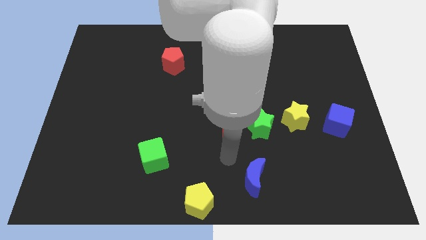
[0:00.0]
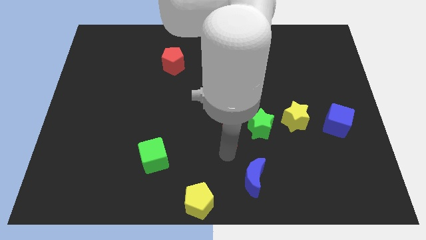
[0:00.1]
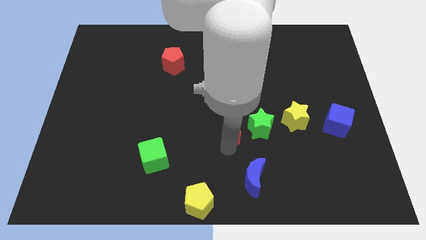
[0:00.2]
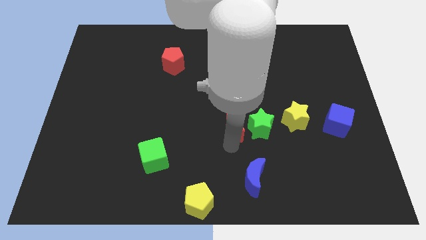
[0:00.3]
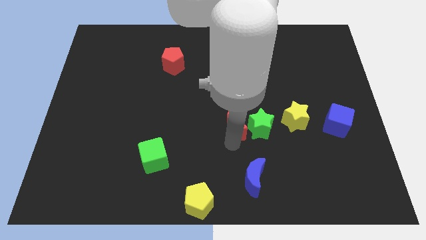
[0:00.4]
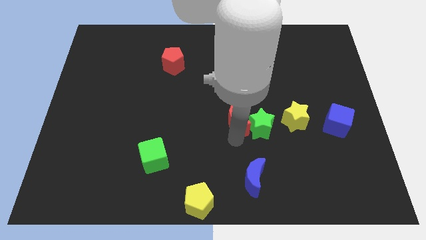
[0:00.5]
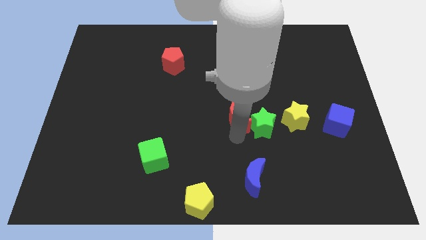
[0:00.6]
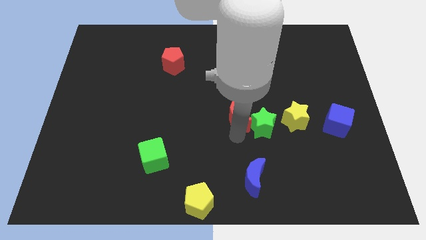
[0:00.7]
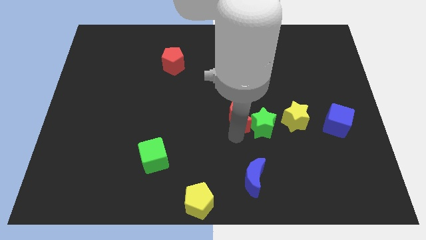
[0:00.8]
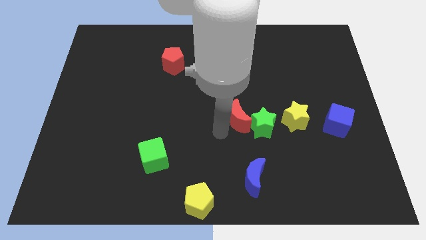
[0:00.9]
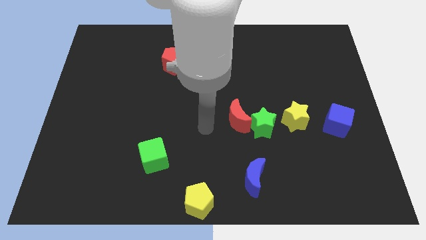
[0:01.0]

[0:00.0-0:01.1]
push the red crescent into the green star

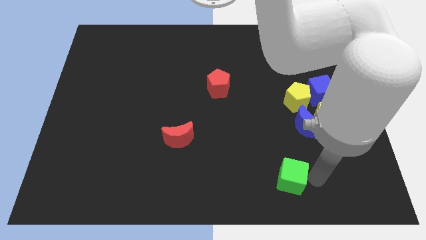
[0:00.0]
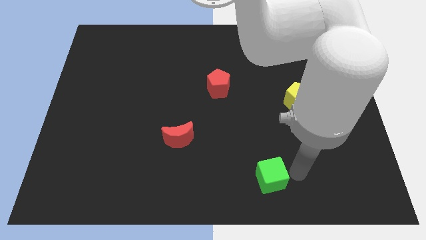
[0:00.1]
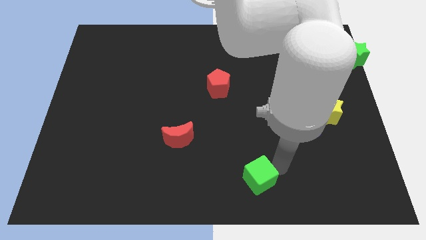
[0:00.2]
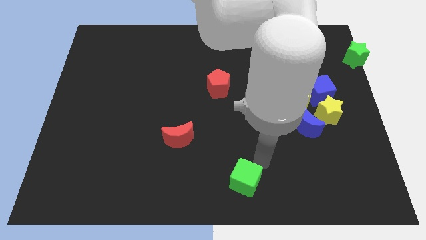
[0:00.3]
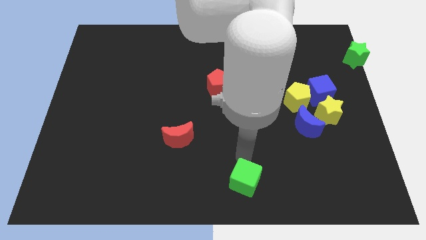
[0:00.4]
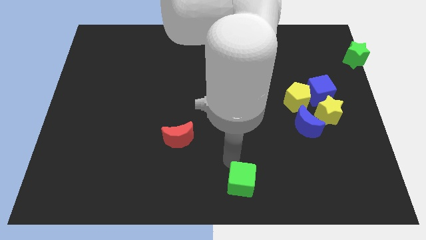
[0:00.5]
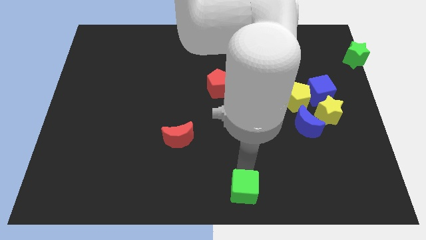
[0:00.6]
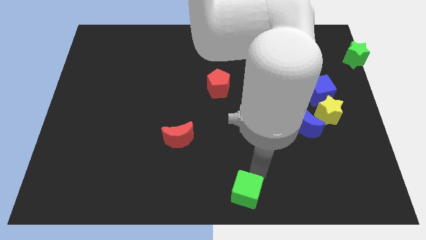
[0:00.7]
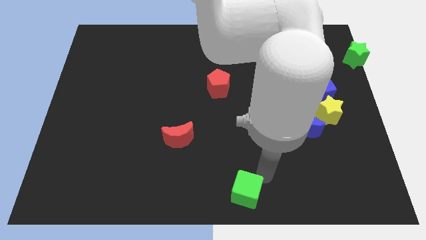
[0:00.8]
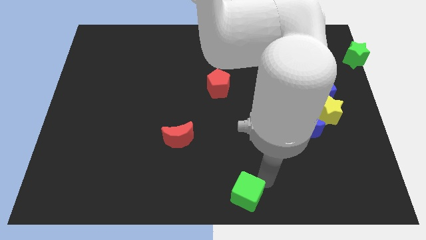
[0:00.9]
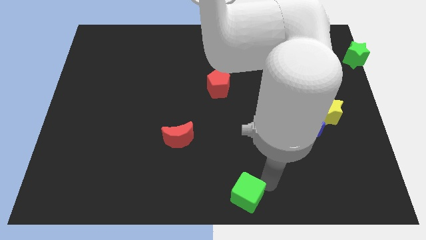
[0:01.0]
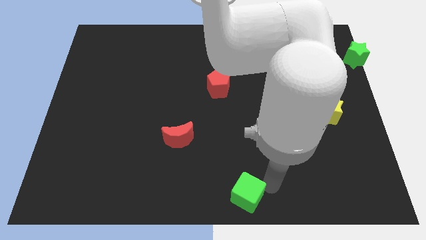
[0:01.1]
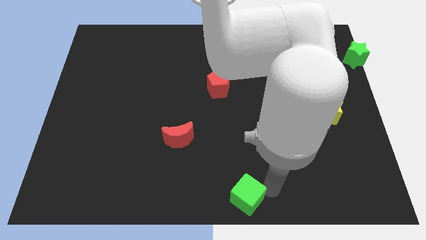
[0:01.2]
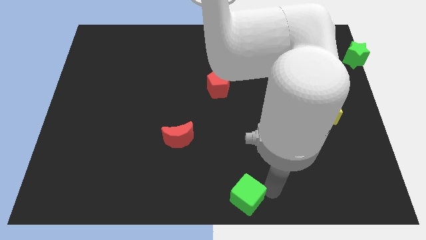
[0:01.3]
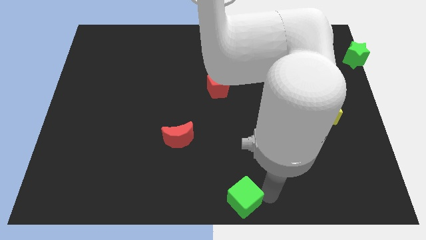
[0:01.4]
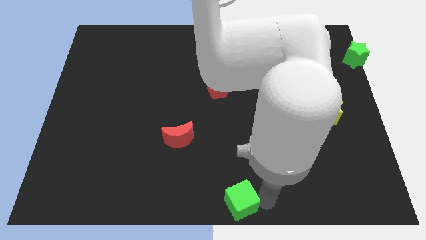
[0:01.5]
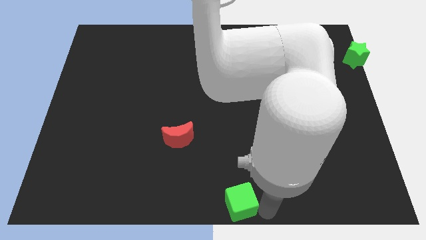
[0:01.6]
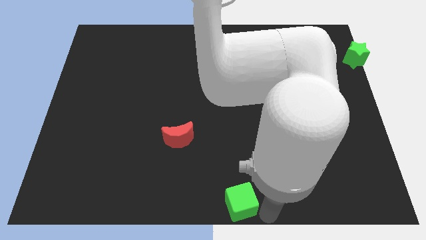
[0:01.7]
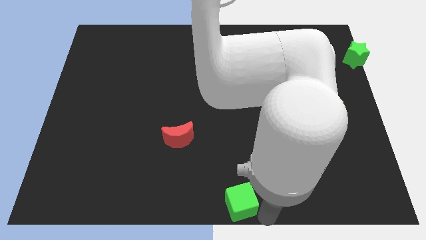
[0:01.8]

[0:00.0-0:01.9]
place the green cube towards the bottom centre of the board

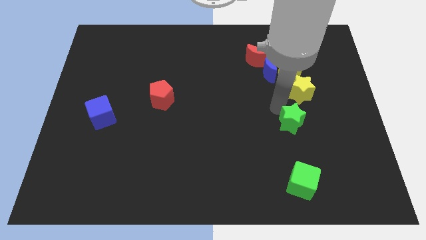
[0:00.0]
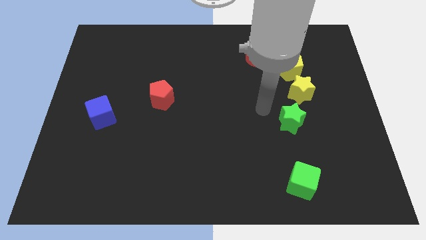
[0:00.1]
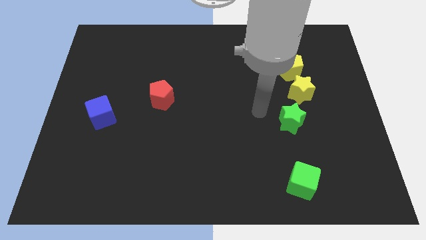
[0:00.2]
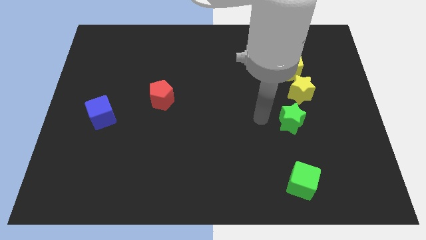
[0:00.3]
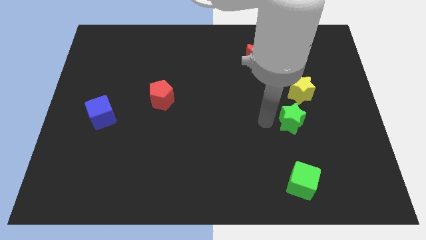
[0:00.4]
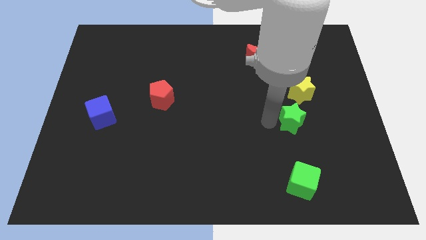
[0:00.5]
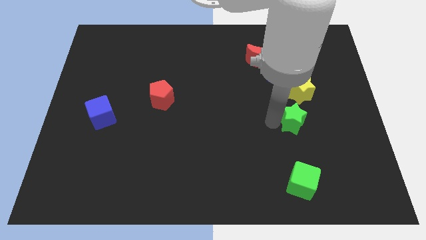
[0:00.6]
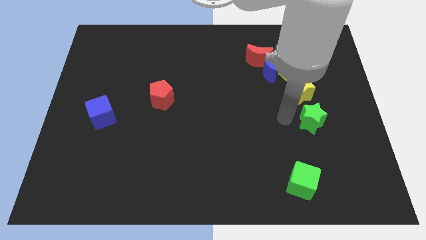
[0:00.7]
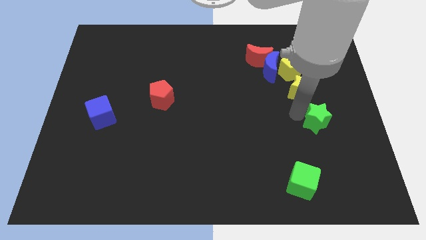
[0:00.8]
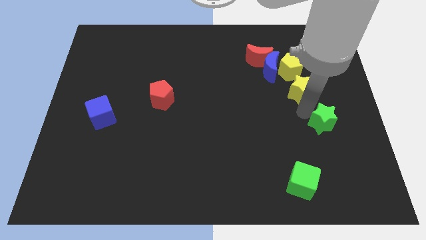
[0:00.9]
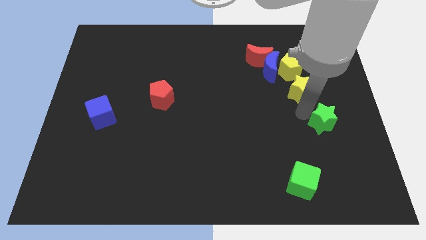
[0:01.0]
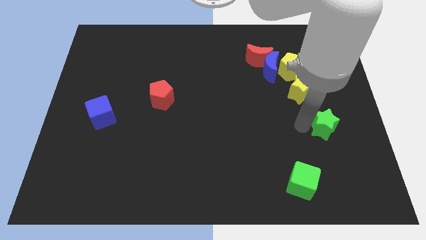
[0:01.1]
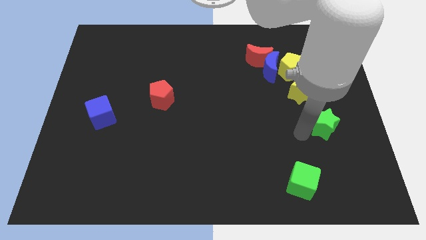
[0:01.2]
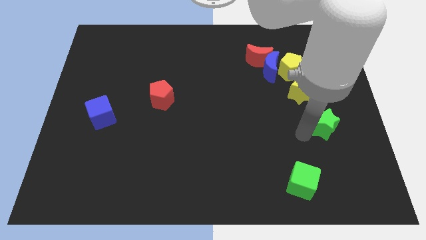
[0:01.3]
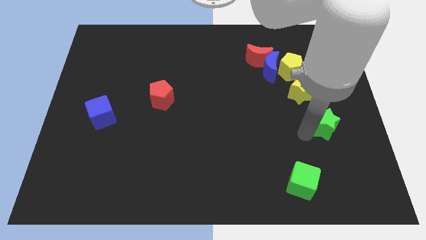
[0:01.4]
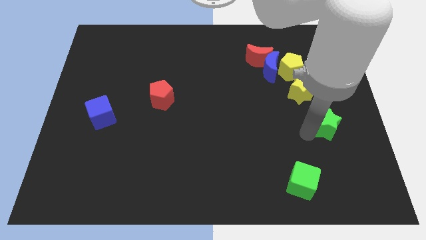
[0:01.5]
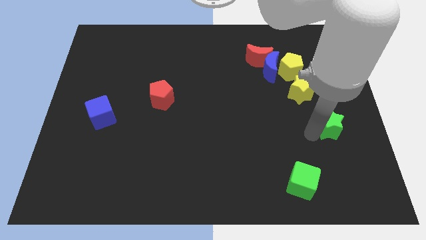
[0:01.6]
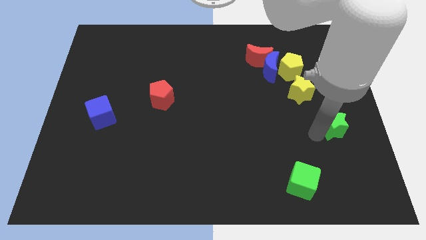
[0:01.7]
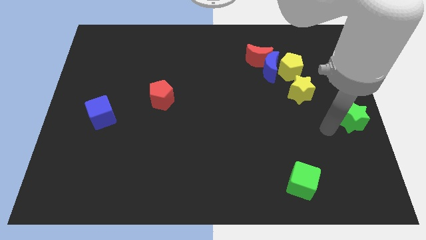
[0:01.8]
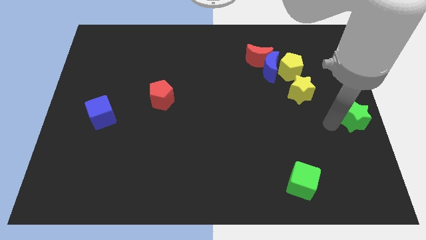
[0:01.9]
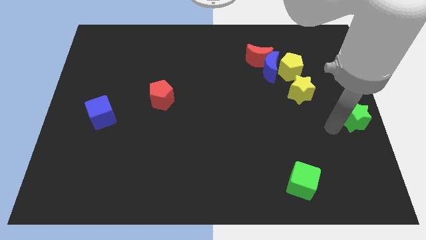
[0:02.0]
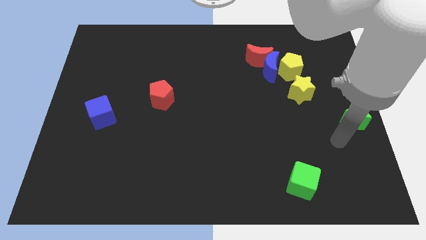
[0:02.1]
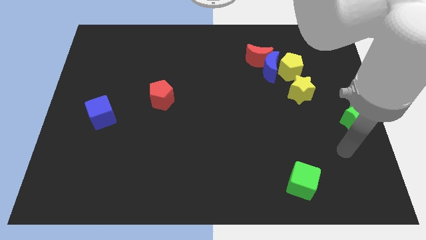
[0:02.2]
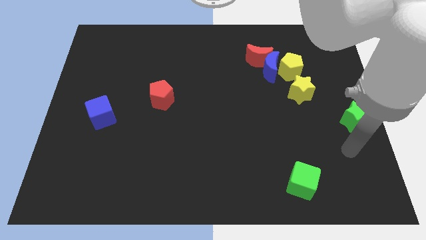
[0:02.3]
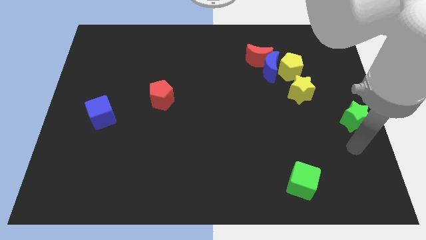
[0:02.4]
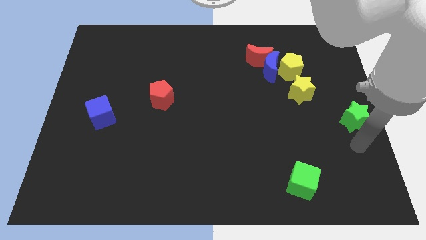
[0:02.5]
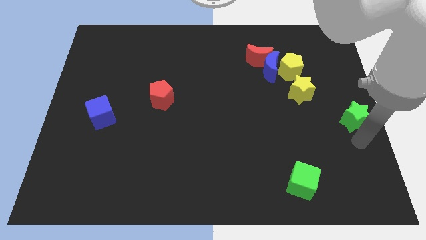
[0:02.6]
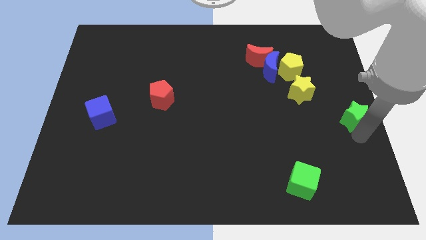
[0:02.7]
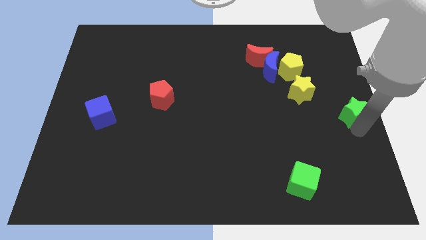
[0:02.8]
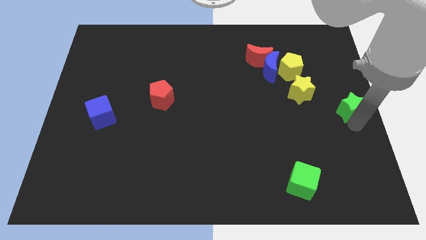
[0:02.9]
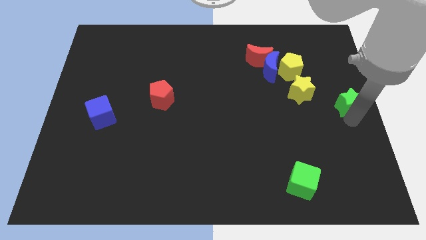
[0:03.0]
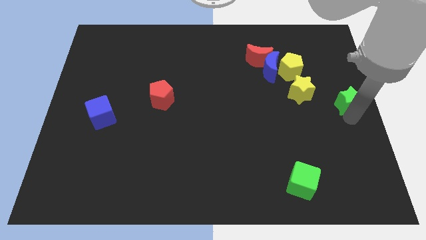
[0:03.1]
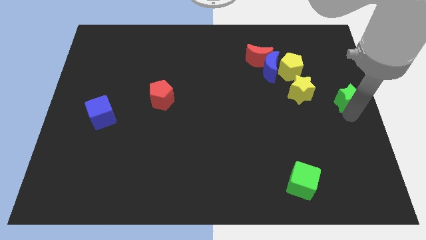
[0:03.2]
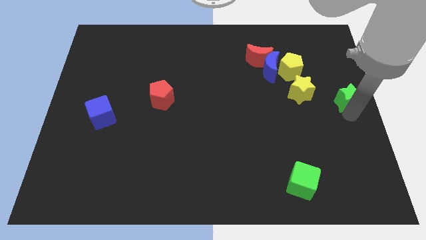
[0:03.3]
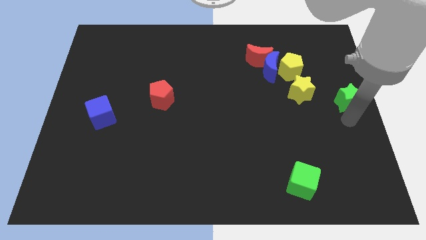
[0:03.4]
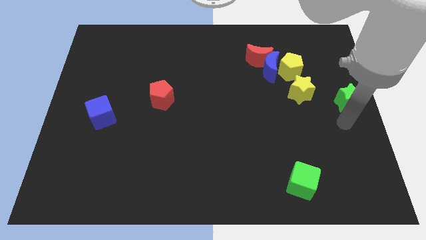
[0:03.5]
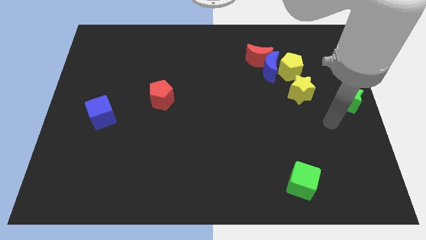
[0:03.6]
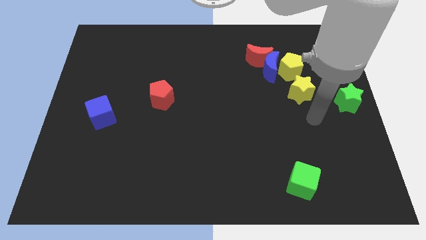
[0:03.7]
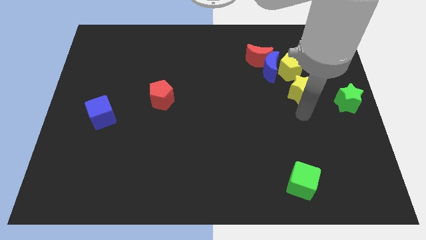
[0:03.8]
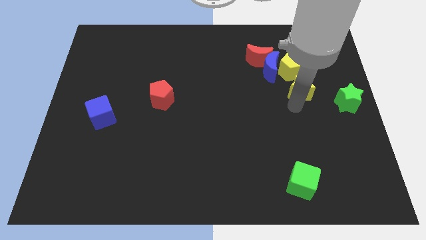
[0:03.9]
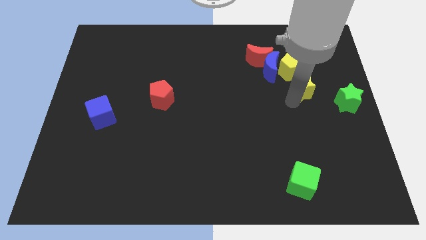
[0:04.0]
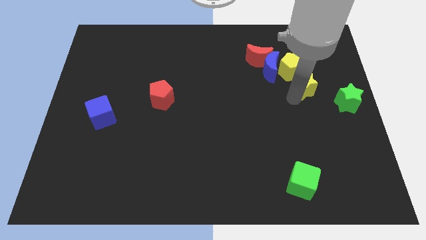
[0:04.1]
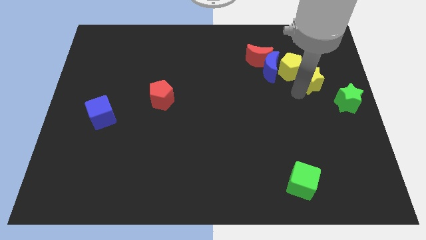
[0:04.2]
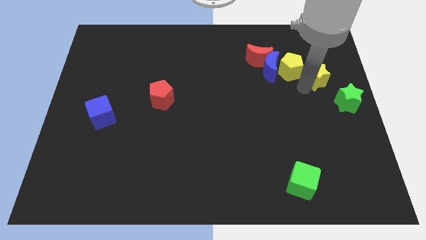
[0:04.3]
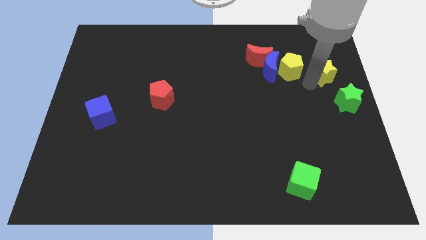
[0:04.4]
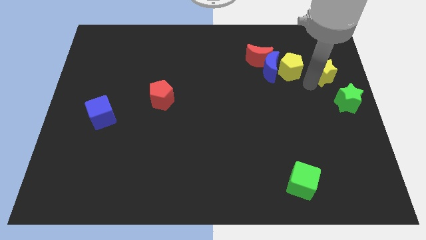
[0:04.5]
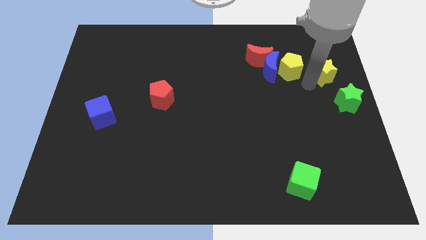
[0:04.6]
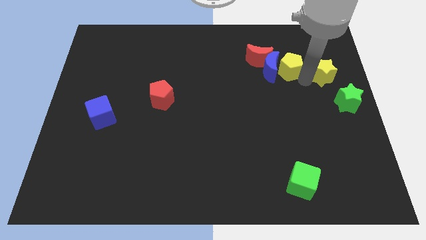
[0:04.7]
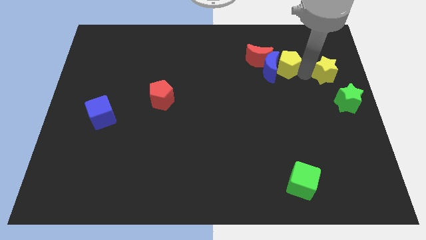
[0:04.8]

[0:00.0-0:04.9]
place the yellow star to the right of the yellow pentagon

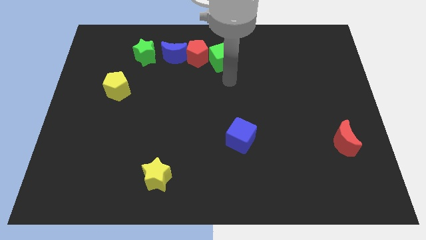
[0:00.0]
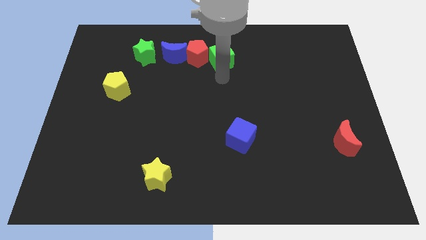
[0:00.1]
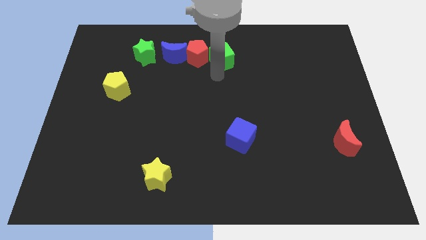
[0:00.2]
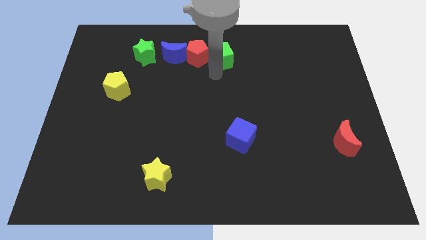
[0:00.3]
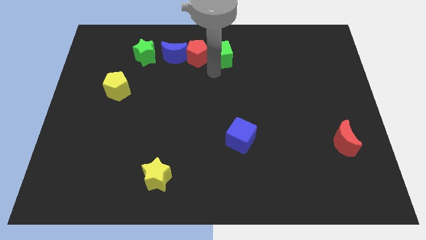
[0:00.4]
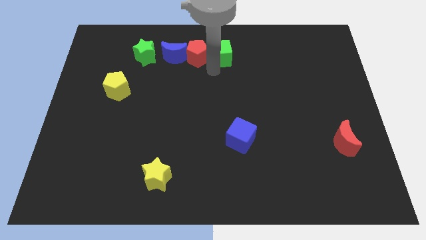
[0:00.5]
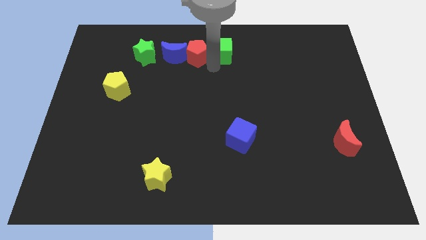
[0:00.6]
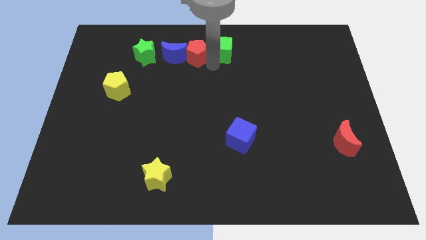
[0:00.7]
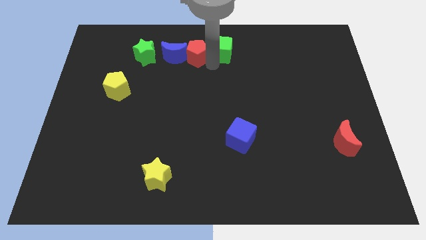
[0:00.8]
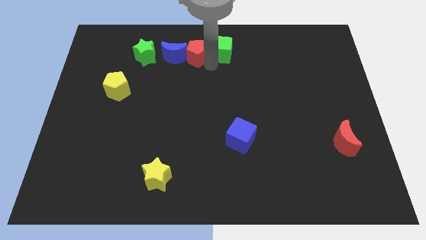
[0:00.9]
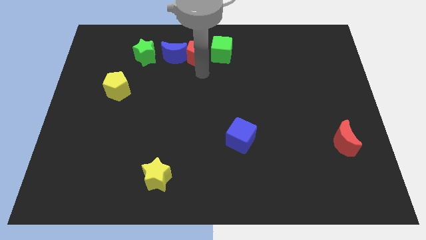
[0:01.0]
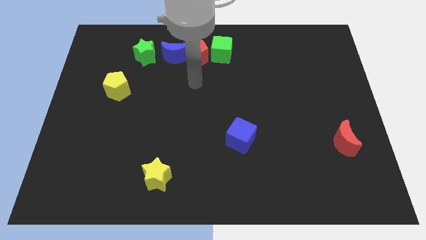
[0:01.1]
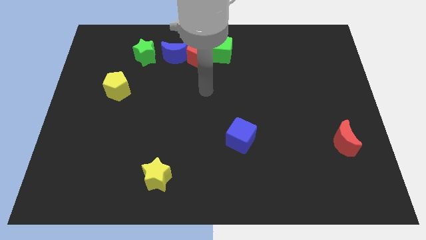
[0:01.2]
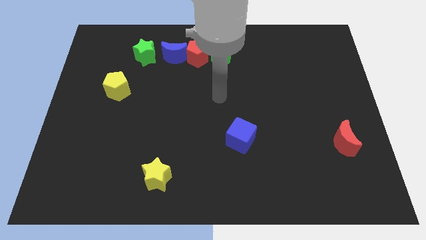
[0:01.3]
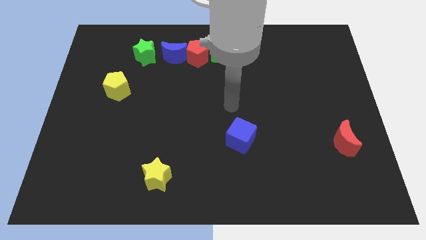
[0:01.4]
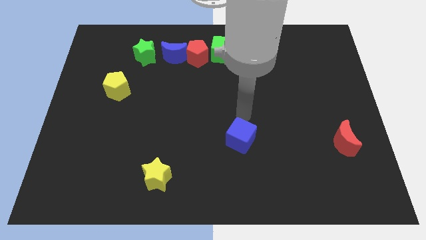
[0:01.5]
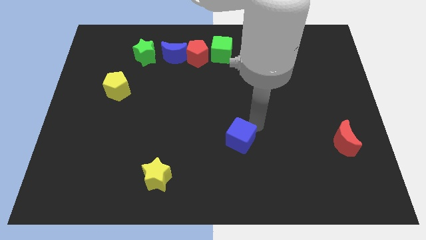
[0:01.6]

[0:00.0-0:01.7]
move your arm above the blue cube
